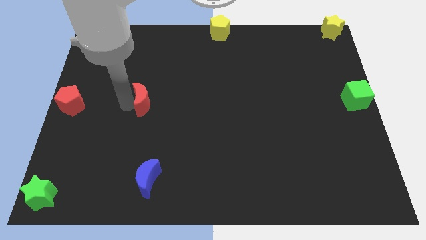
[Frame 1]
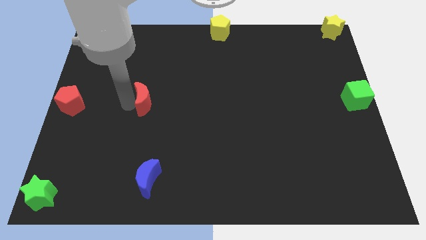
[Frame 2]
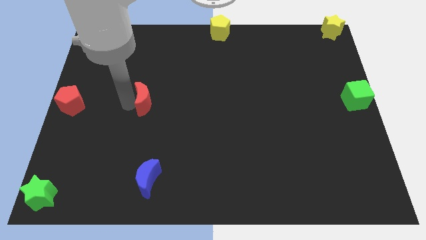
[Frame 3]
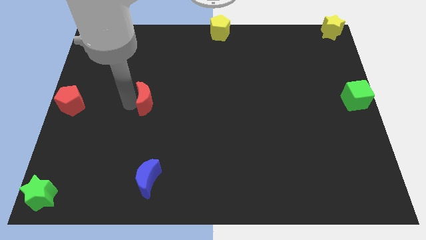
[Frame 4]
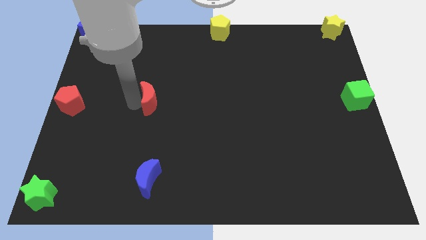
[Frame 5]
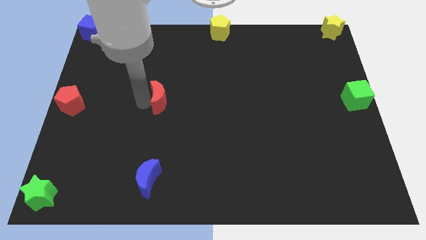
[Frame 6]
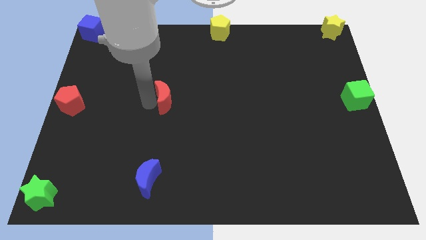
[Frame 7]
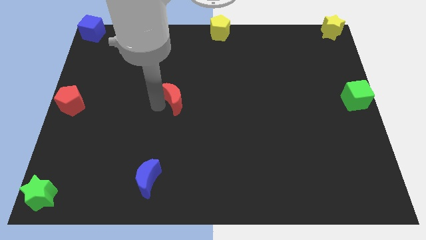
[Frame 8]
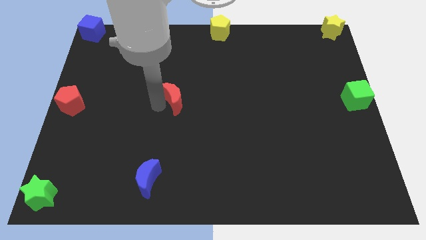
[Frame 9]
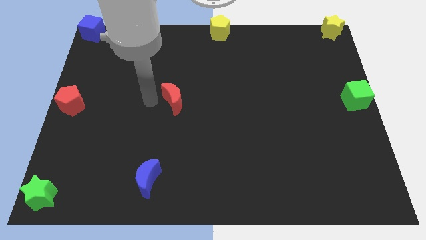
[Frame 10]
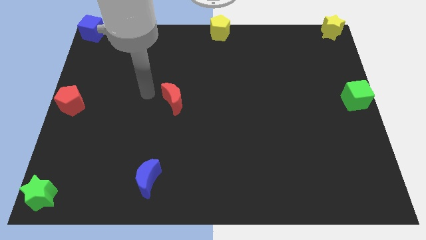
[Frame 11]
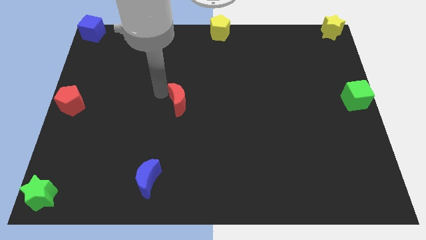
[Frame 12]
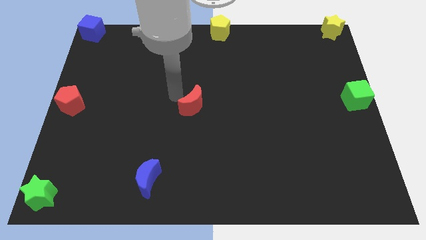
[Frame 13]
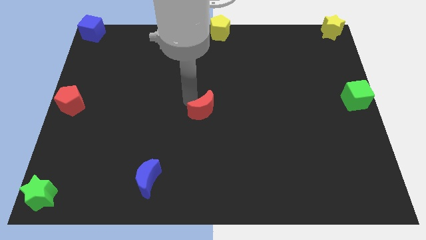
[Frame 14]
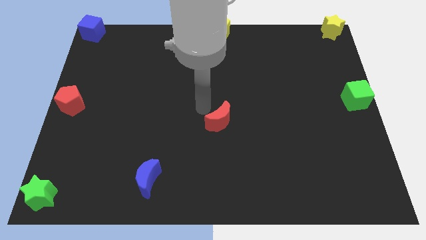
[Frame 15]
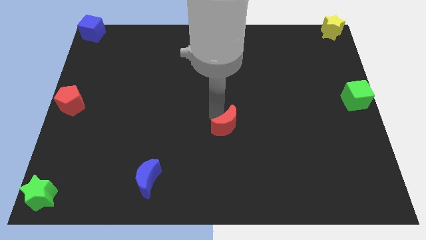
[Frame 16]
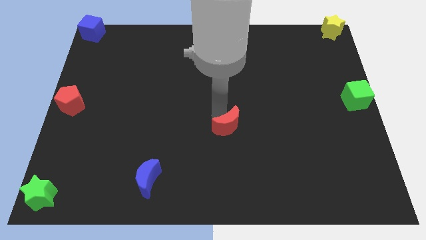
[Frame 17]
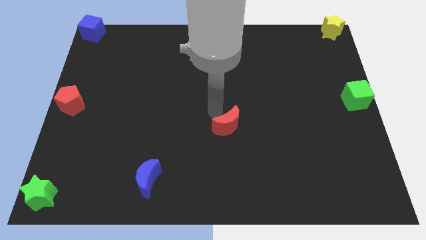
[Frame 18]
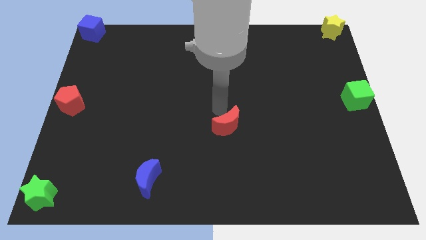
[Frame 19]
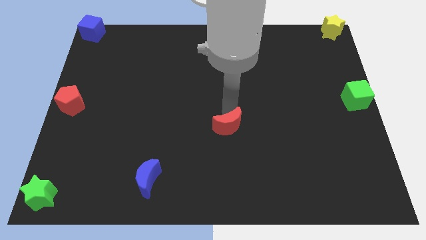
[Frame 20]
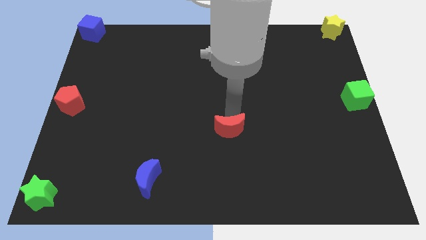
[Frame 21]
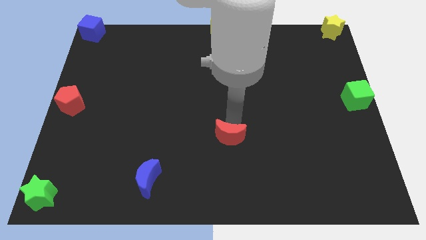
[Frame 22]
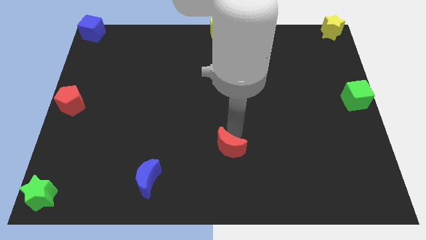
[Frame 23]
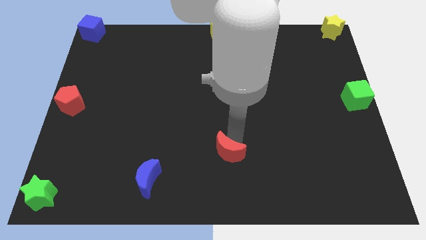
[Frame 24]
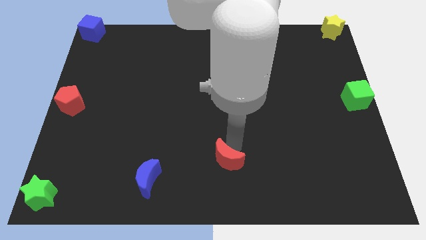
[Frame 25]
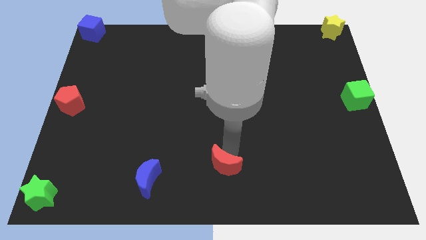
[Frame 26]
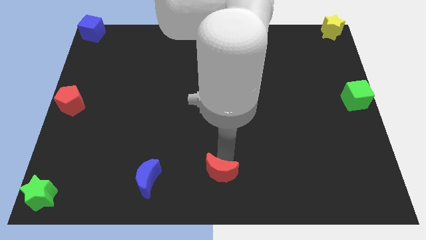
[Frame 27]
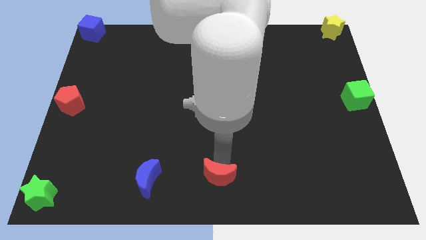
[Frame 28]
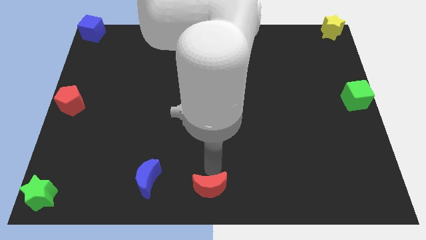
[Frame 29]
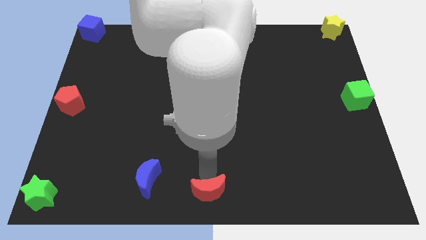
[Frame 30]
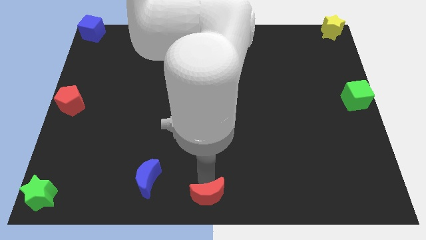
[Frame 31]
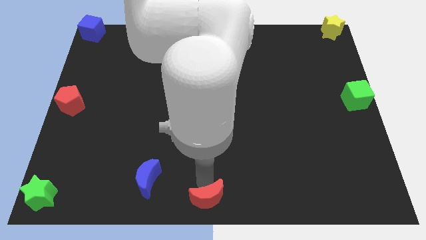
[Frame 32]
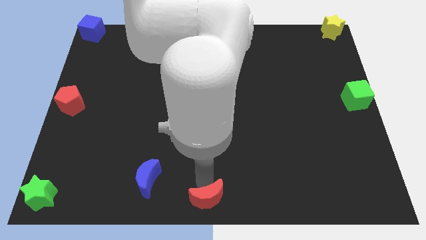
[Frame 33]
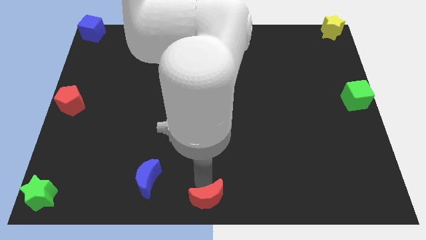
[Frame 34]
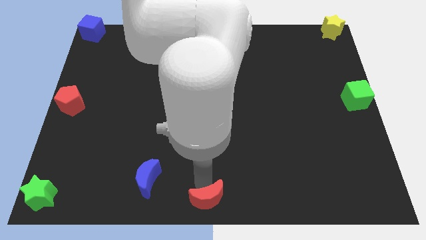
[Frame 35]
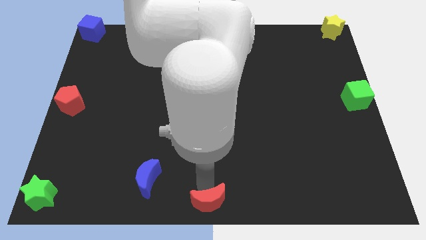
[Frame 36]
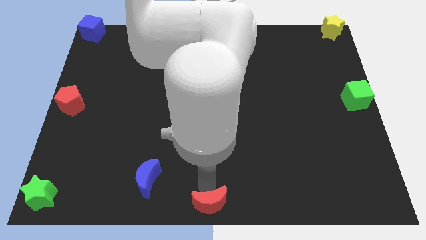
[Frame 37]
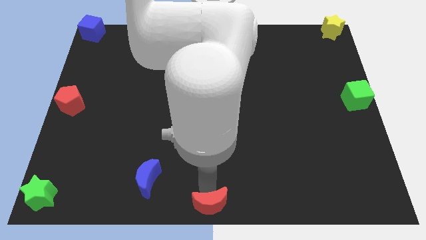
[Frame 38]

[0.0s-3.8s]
push red moon towards bottom center

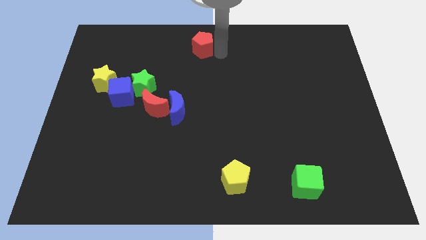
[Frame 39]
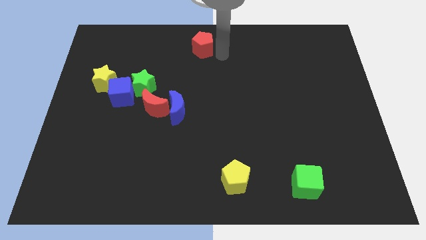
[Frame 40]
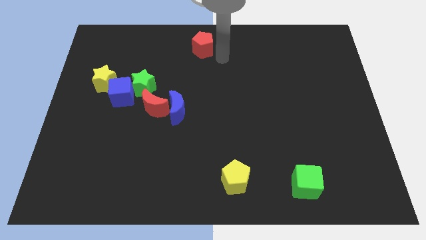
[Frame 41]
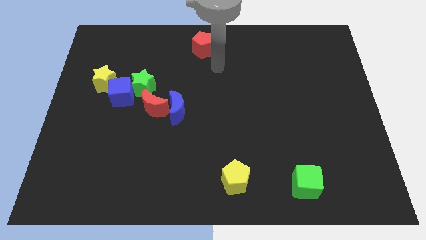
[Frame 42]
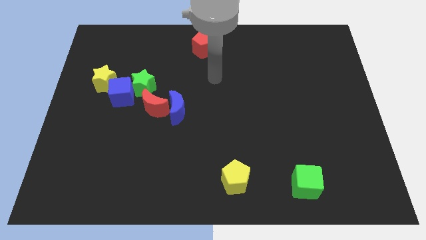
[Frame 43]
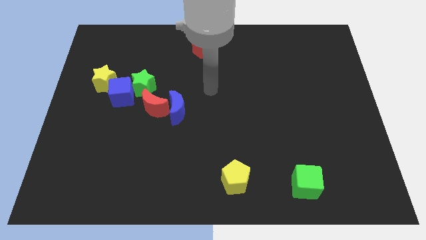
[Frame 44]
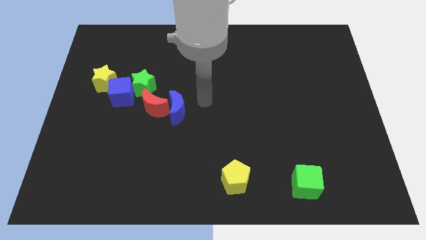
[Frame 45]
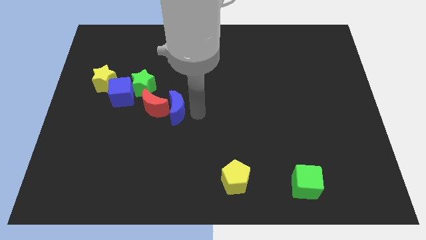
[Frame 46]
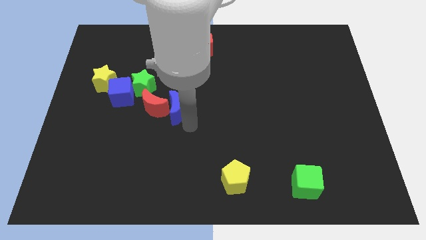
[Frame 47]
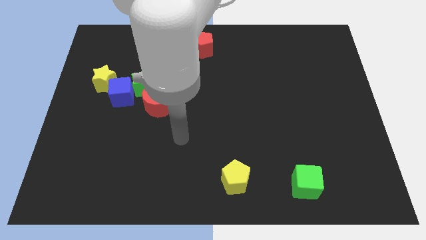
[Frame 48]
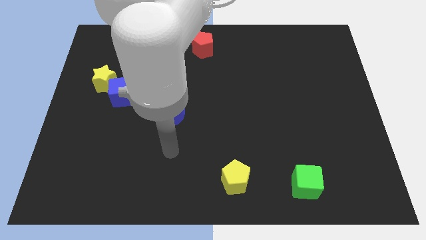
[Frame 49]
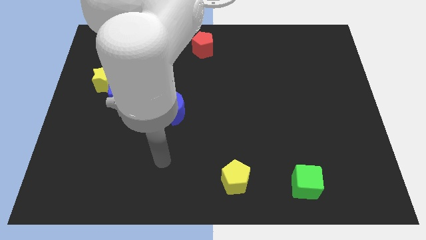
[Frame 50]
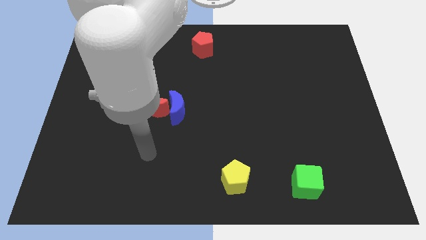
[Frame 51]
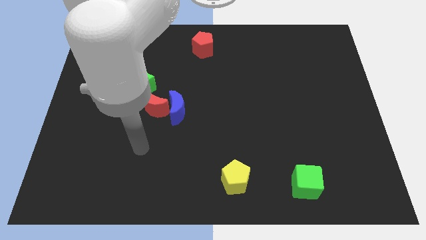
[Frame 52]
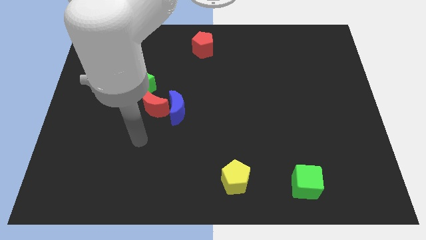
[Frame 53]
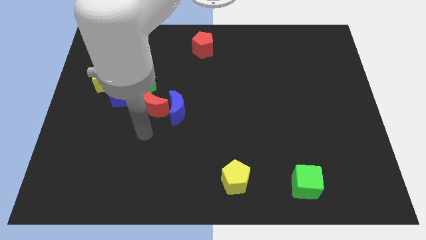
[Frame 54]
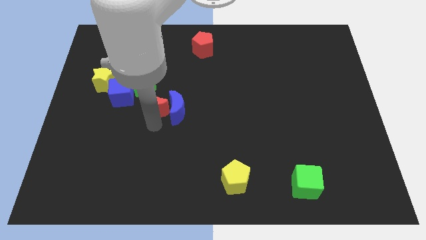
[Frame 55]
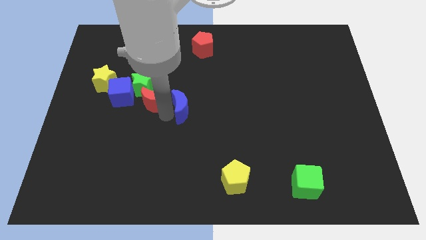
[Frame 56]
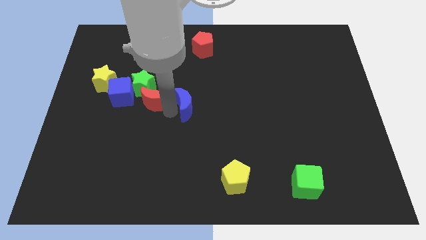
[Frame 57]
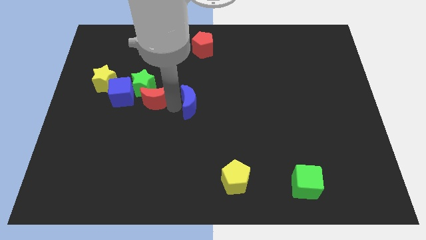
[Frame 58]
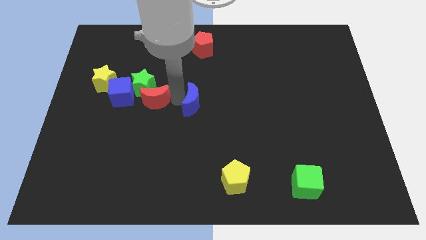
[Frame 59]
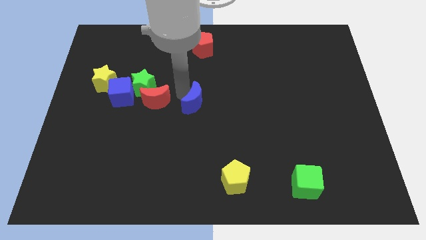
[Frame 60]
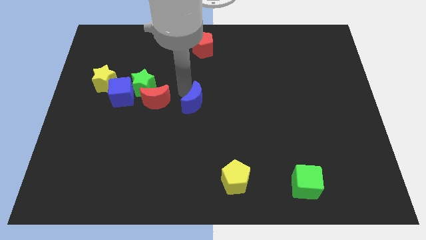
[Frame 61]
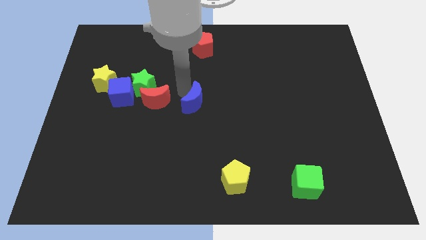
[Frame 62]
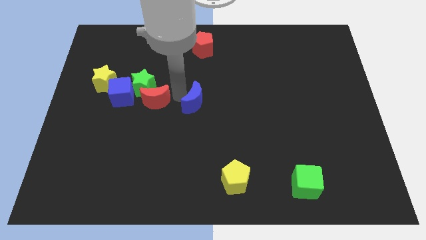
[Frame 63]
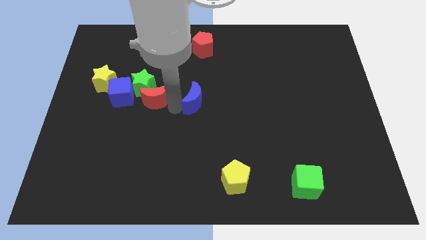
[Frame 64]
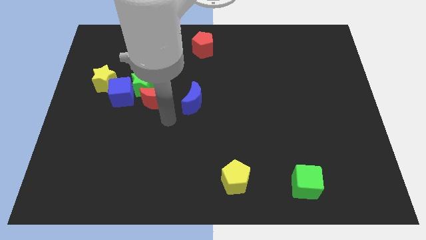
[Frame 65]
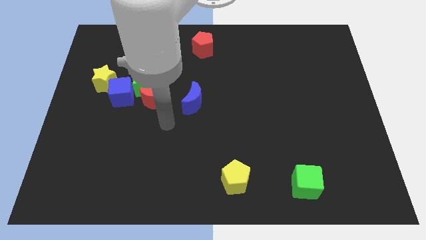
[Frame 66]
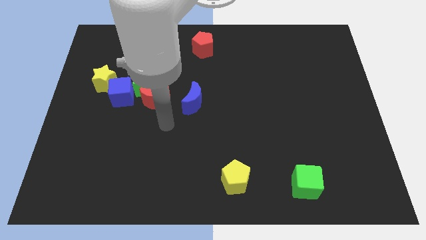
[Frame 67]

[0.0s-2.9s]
place blue moon to the right of red moon

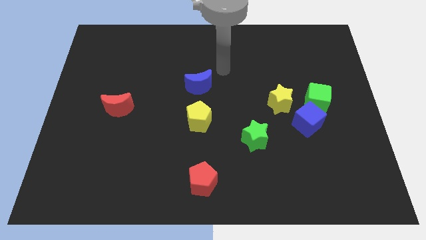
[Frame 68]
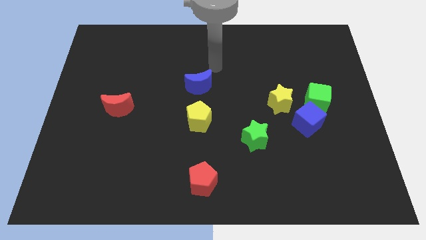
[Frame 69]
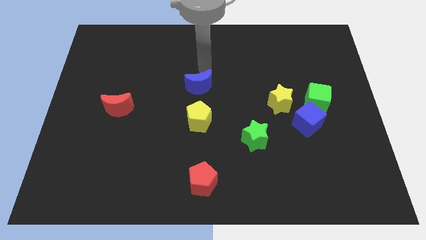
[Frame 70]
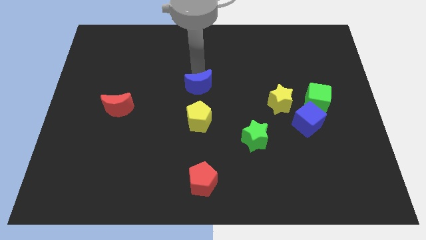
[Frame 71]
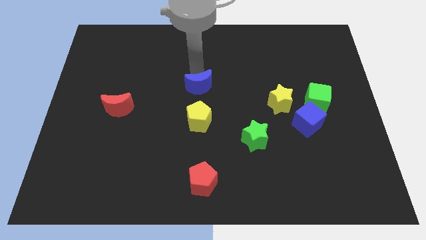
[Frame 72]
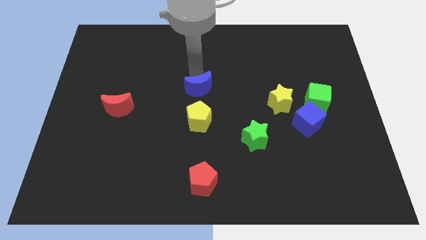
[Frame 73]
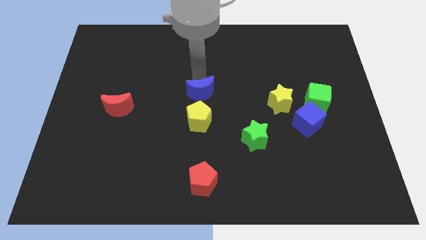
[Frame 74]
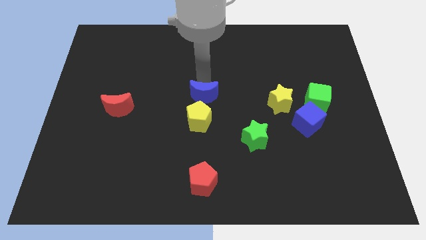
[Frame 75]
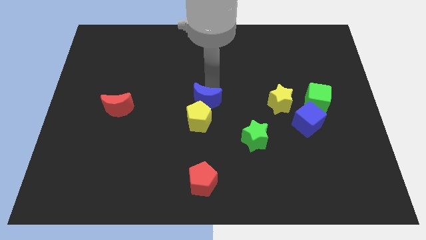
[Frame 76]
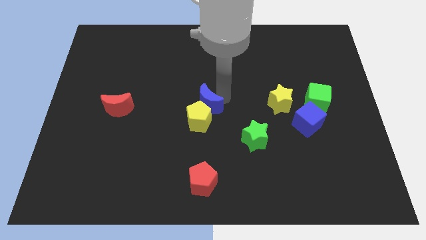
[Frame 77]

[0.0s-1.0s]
move the blue crescent above the yellow pentagon

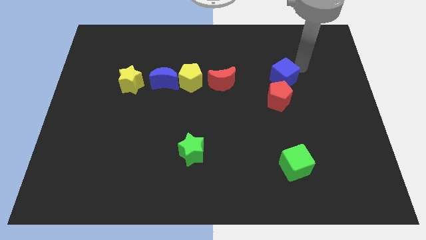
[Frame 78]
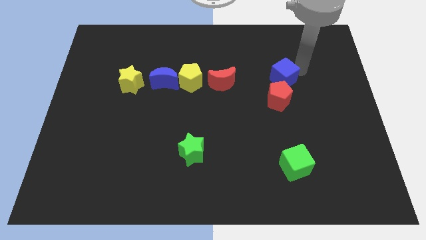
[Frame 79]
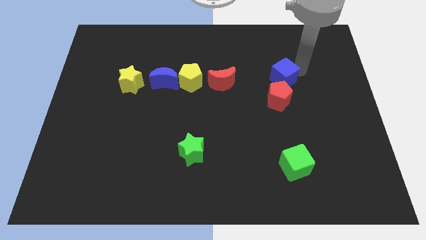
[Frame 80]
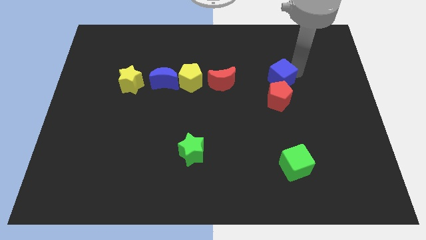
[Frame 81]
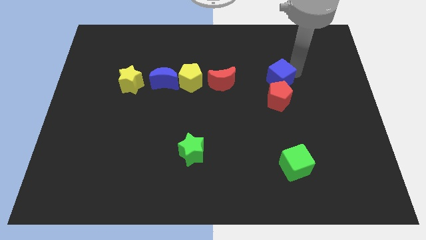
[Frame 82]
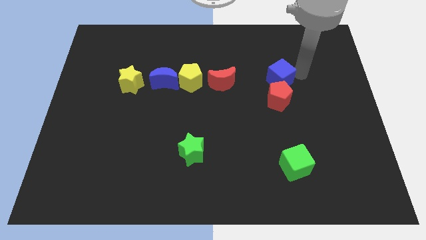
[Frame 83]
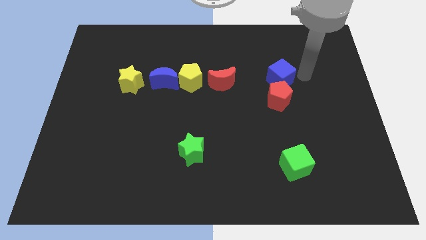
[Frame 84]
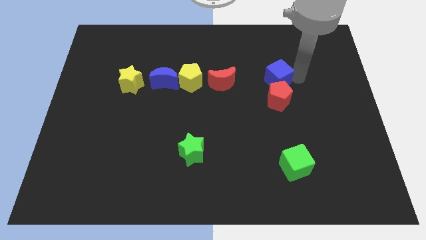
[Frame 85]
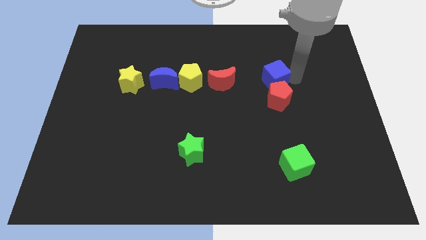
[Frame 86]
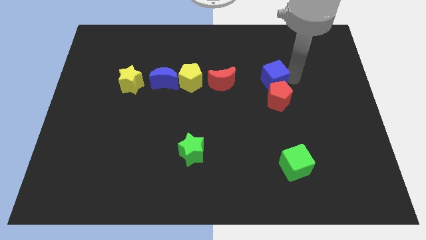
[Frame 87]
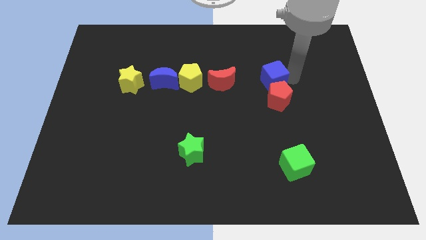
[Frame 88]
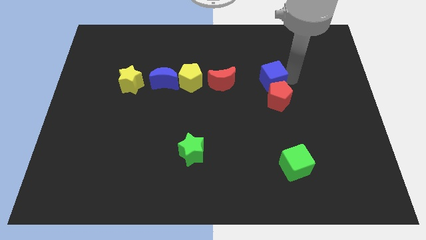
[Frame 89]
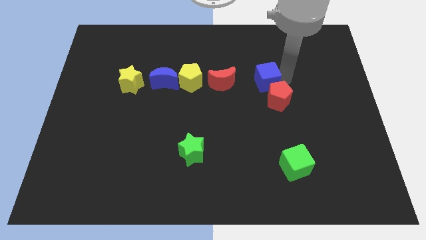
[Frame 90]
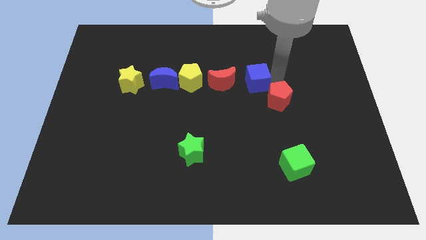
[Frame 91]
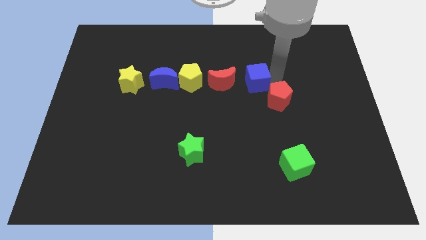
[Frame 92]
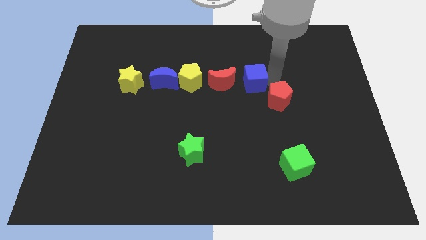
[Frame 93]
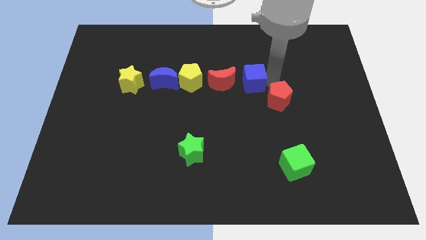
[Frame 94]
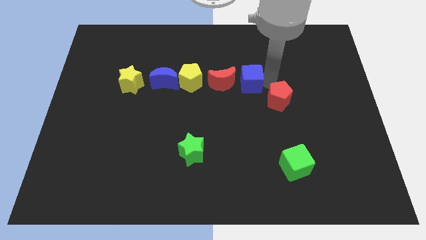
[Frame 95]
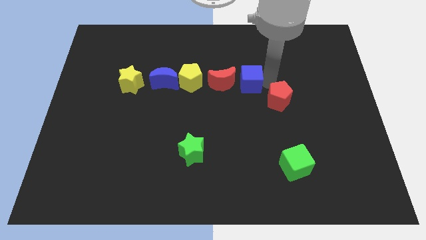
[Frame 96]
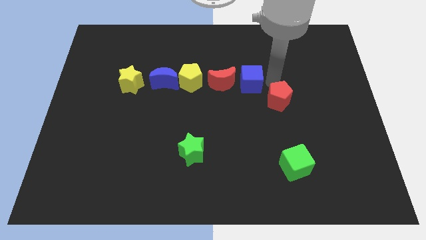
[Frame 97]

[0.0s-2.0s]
move the blue cube to the right of the red crescent
